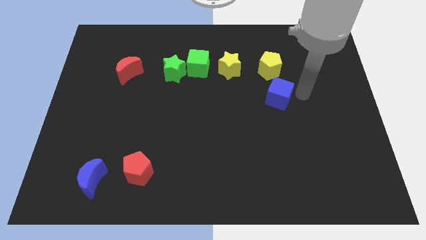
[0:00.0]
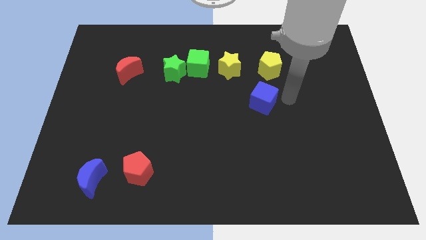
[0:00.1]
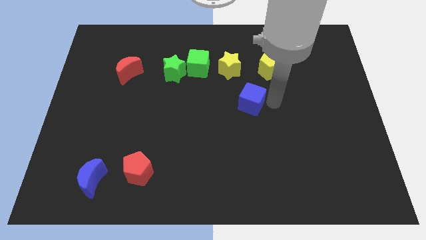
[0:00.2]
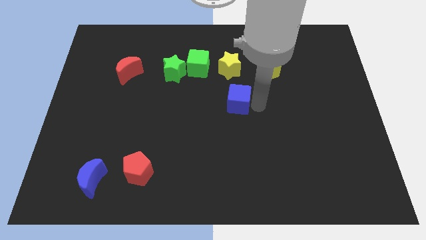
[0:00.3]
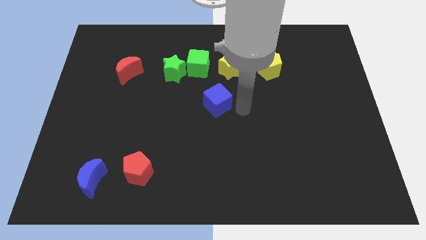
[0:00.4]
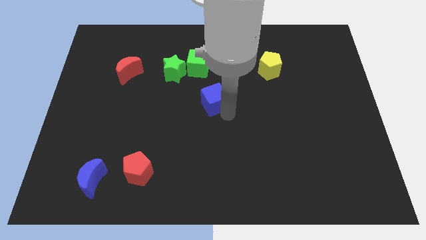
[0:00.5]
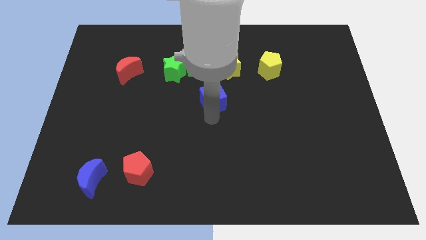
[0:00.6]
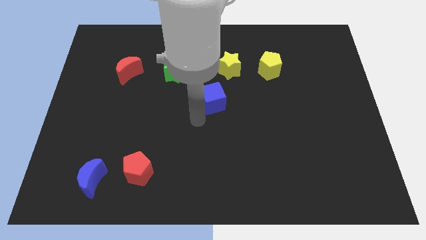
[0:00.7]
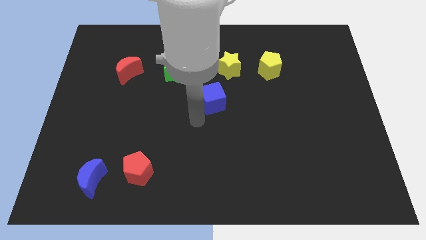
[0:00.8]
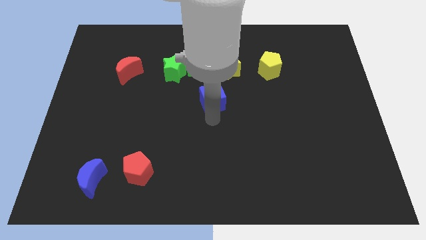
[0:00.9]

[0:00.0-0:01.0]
move the blue cube diagonally to the right side of the green star

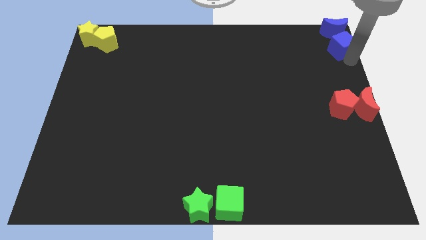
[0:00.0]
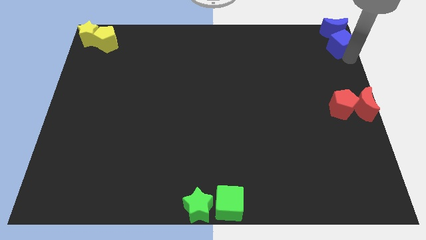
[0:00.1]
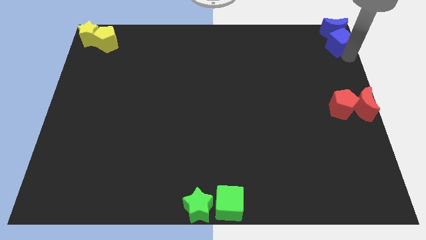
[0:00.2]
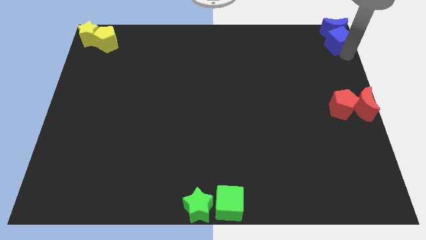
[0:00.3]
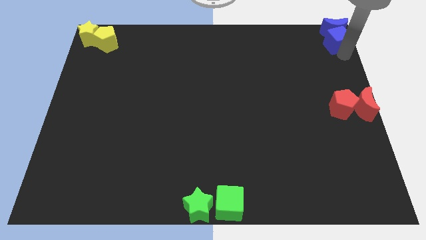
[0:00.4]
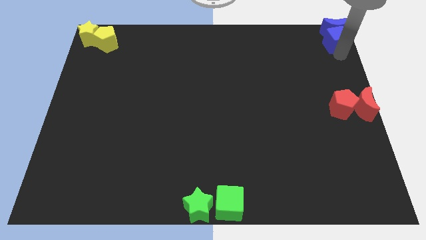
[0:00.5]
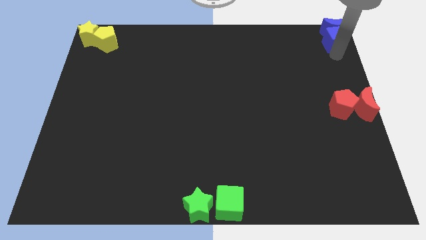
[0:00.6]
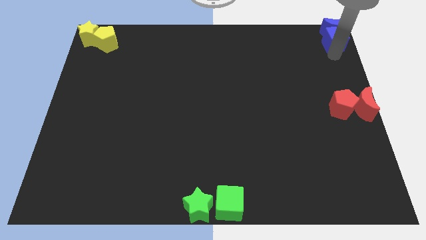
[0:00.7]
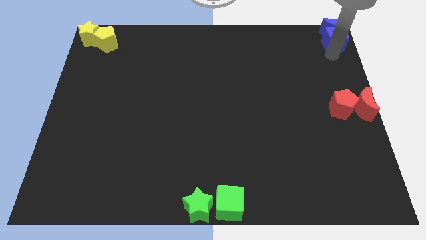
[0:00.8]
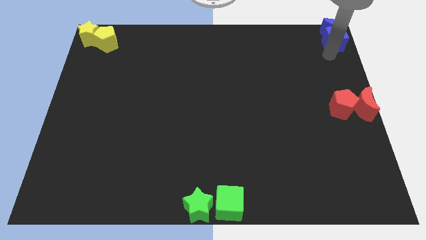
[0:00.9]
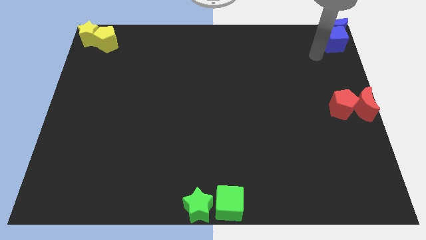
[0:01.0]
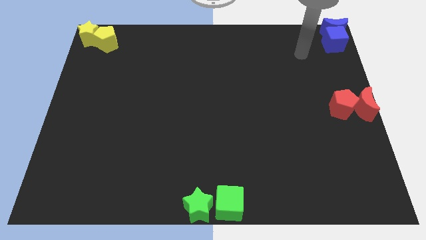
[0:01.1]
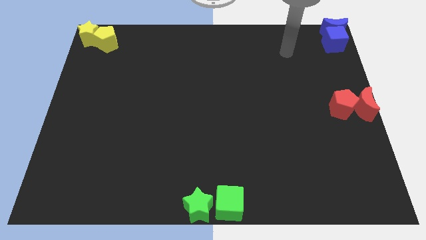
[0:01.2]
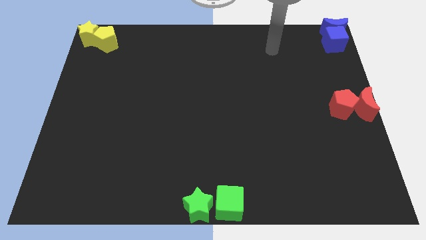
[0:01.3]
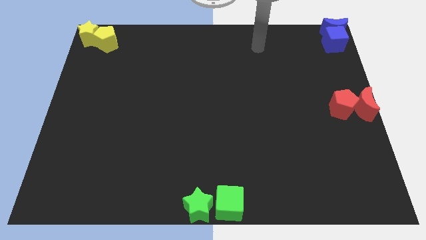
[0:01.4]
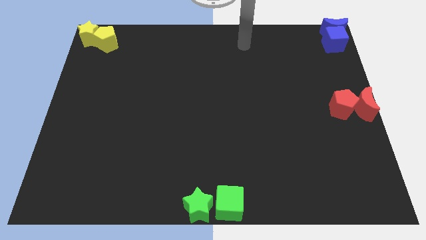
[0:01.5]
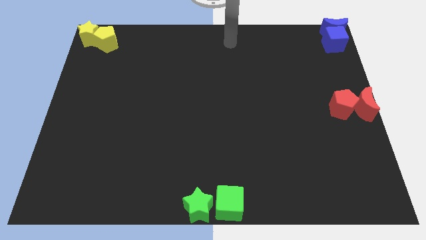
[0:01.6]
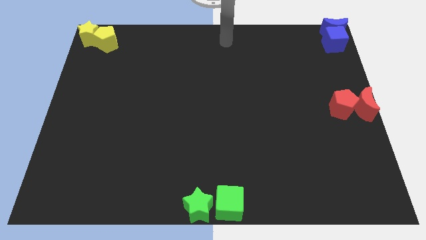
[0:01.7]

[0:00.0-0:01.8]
move the blue blocks to the top right corner

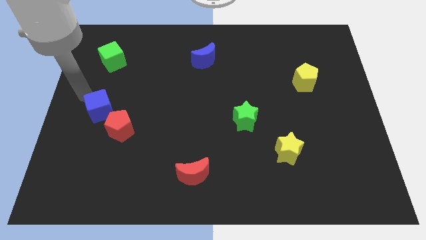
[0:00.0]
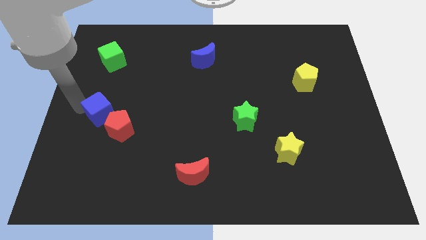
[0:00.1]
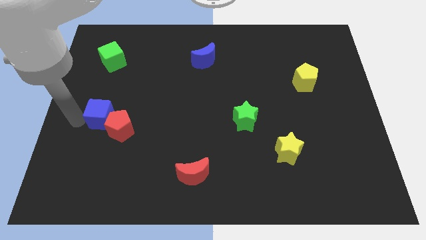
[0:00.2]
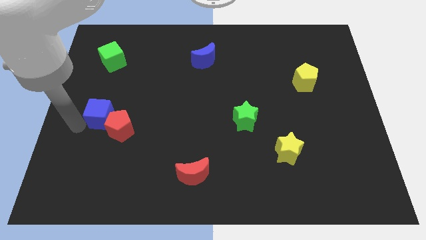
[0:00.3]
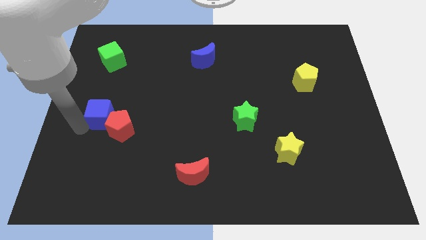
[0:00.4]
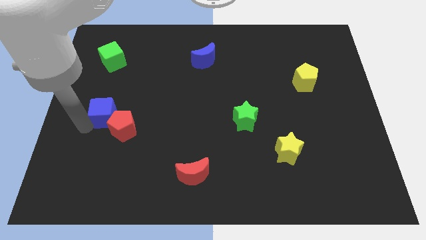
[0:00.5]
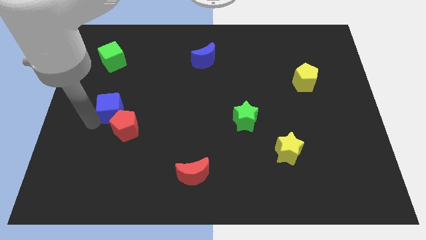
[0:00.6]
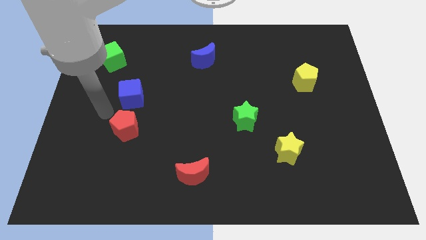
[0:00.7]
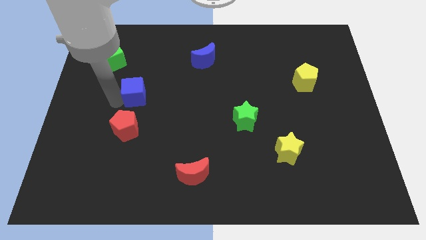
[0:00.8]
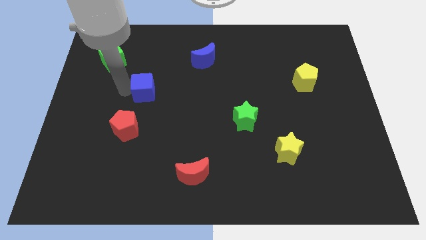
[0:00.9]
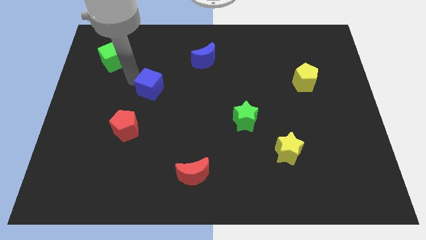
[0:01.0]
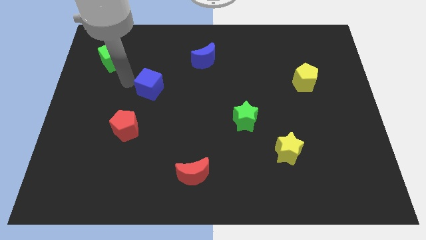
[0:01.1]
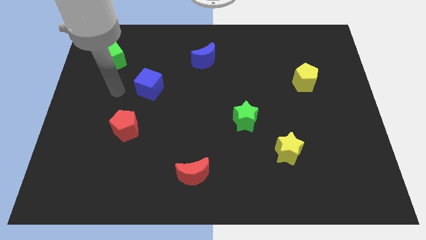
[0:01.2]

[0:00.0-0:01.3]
move the blue cube diagonal left of blue moon

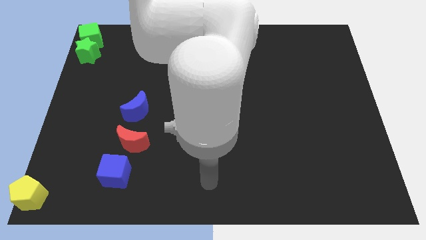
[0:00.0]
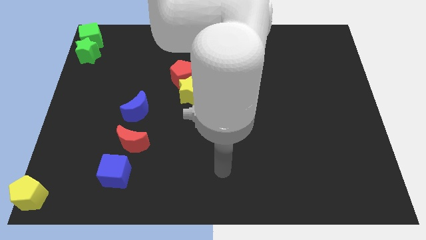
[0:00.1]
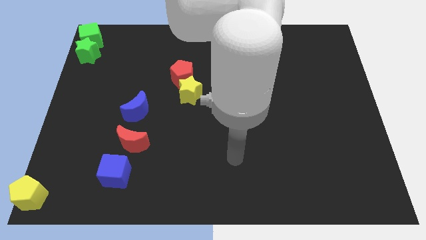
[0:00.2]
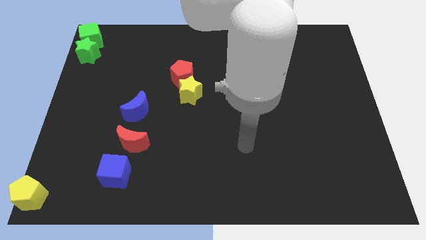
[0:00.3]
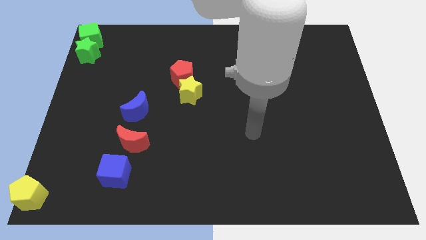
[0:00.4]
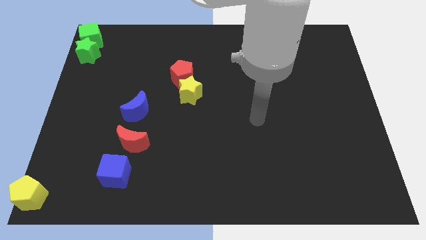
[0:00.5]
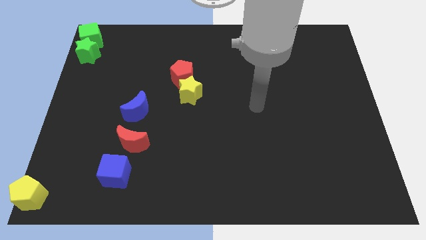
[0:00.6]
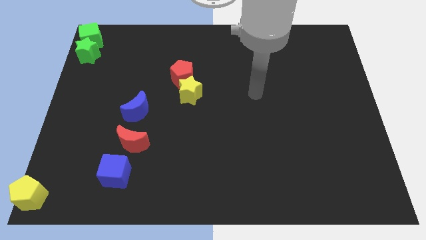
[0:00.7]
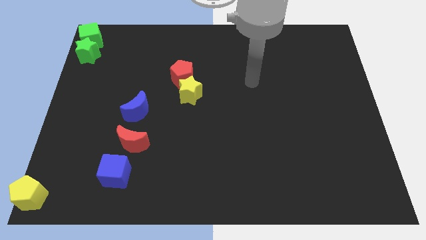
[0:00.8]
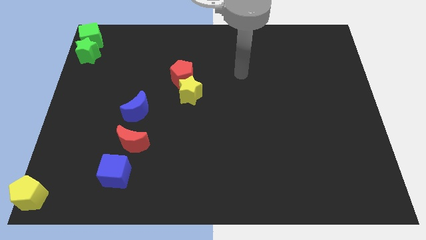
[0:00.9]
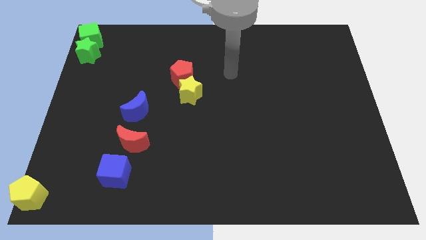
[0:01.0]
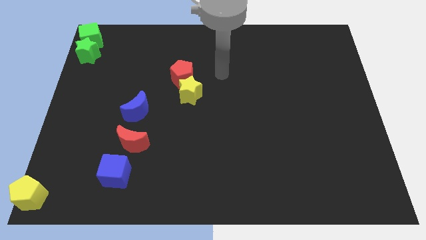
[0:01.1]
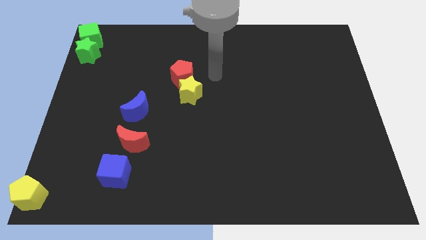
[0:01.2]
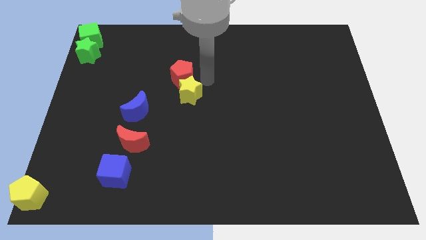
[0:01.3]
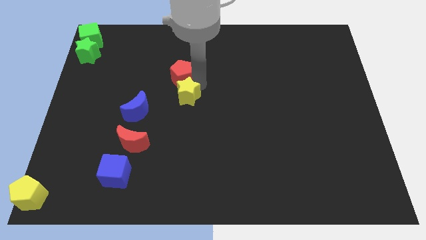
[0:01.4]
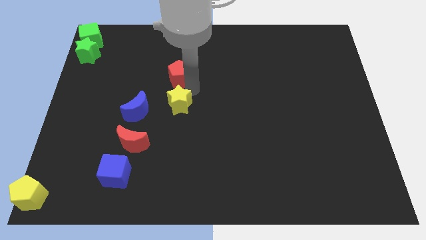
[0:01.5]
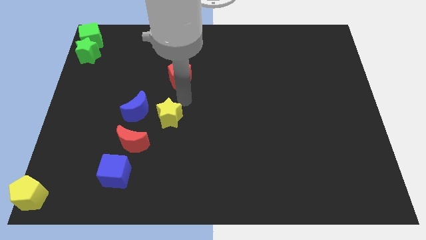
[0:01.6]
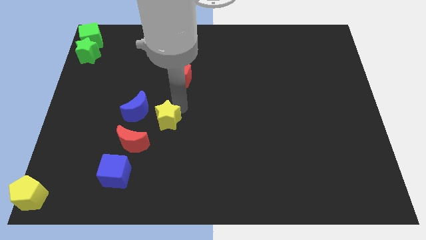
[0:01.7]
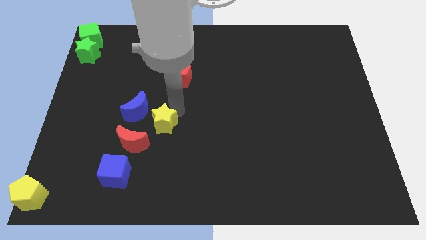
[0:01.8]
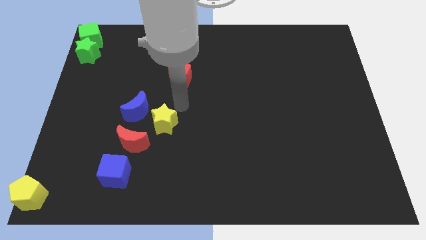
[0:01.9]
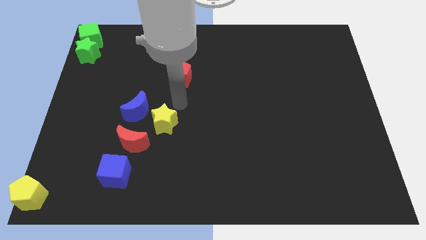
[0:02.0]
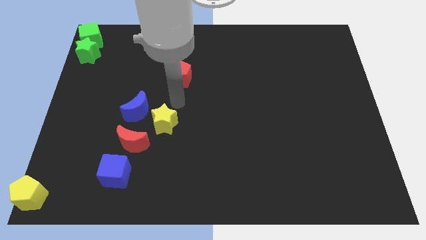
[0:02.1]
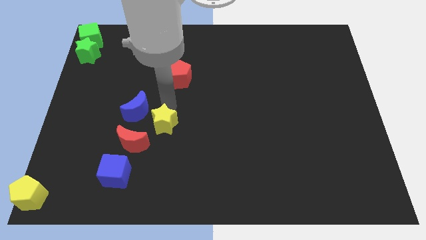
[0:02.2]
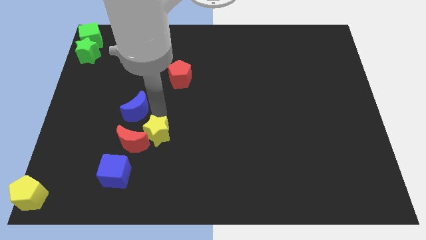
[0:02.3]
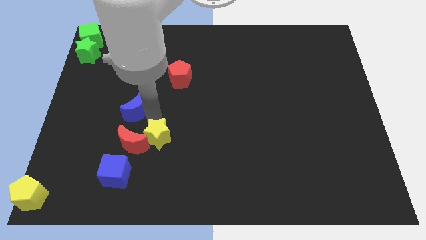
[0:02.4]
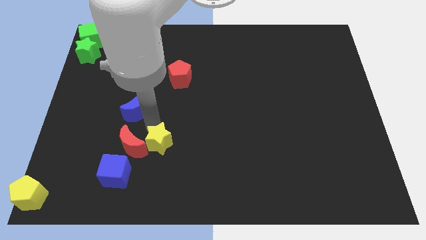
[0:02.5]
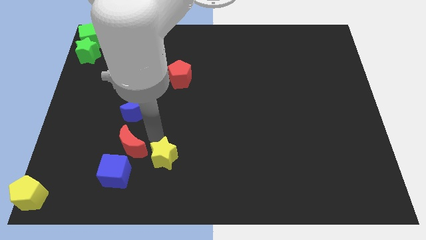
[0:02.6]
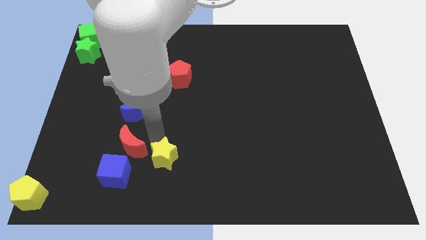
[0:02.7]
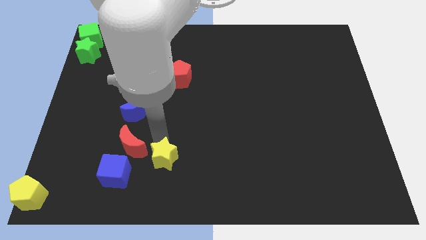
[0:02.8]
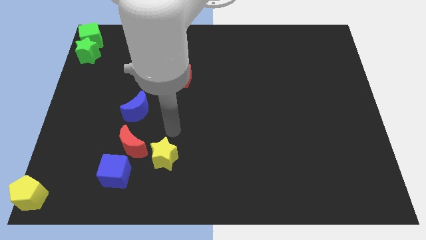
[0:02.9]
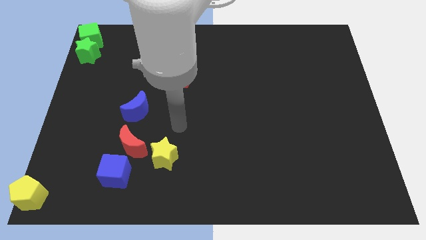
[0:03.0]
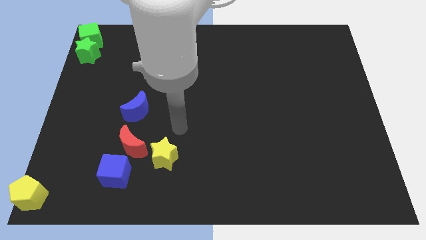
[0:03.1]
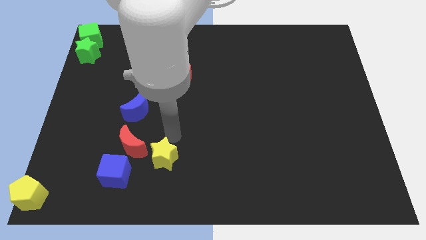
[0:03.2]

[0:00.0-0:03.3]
move the yellow star to the right od the red crescent

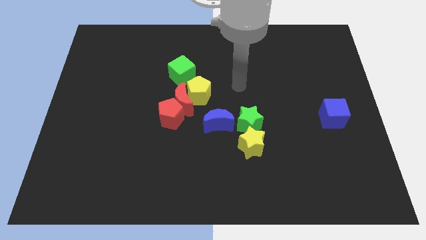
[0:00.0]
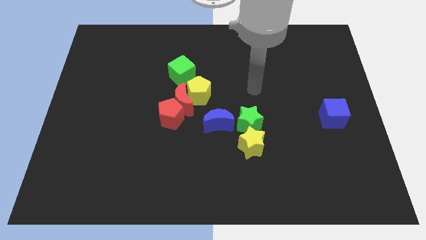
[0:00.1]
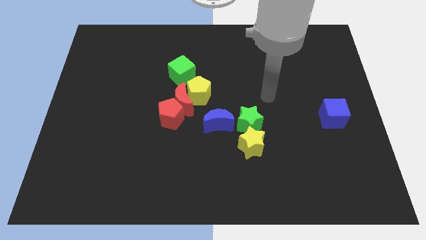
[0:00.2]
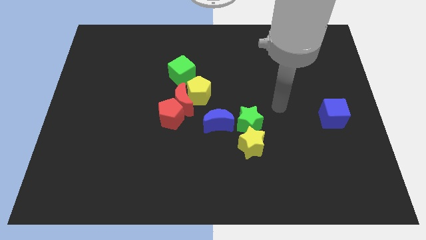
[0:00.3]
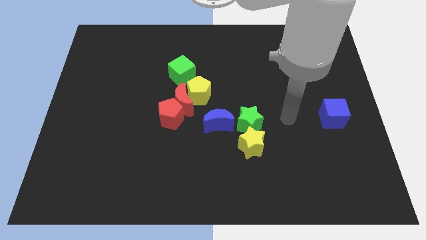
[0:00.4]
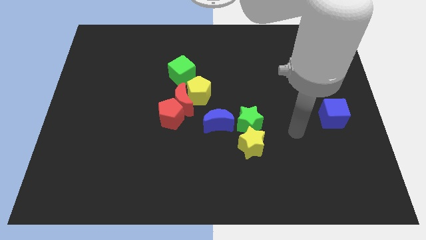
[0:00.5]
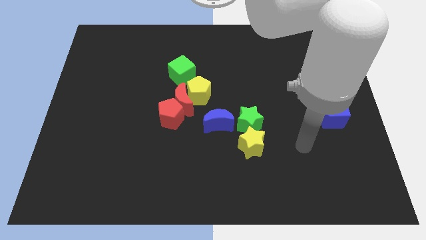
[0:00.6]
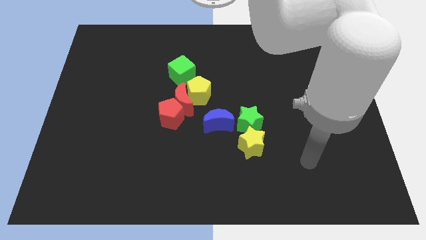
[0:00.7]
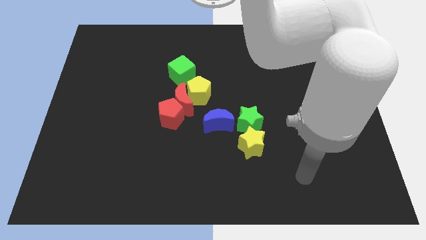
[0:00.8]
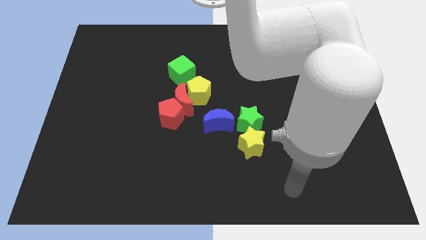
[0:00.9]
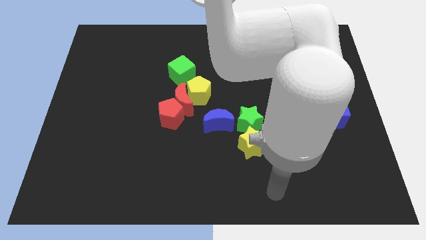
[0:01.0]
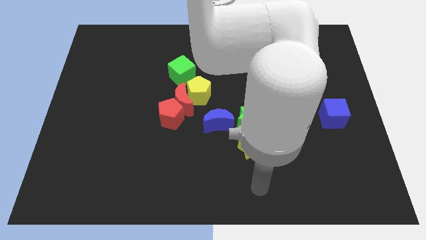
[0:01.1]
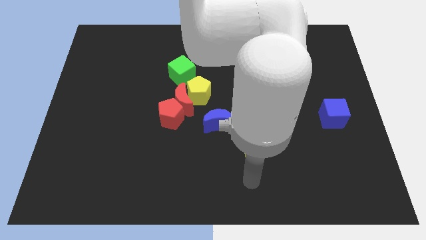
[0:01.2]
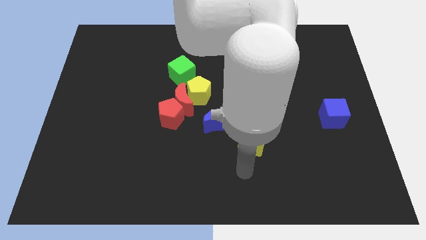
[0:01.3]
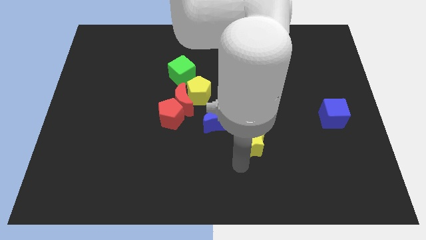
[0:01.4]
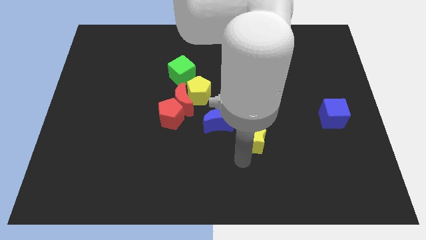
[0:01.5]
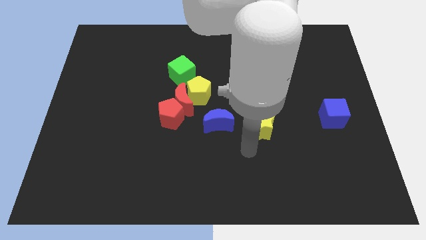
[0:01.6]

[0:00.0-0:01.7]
place your arm towards the yellow star
